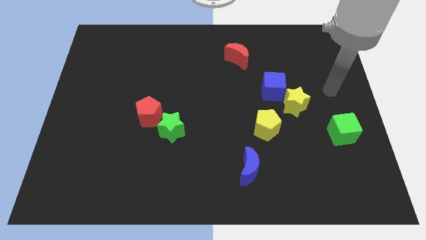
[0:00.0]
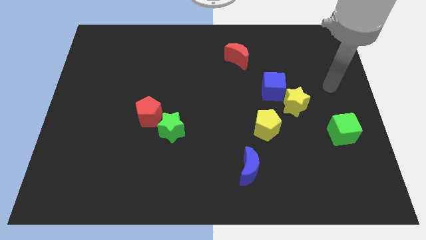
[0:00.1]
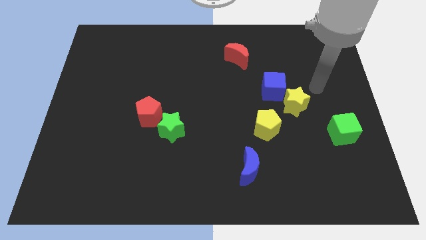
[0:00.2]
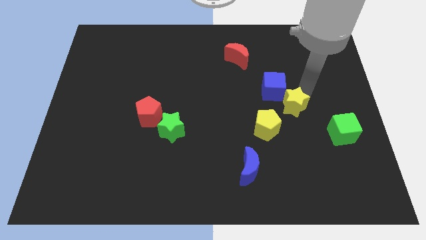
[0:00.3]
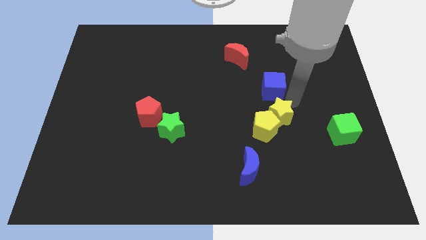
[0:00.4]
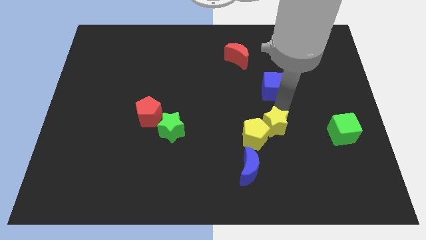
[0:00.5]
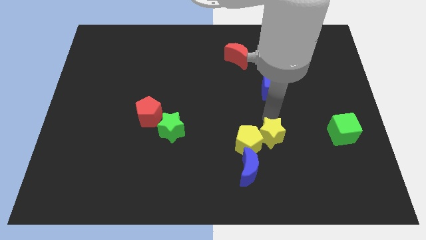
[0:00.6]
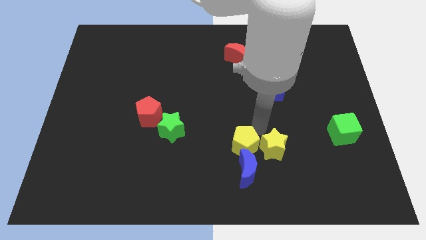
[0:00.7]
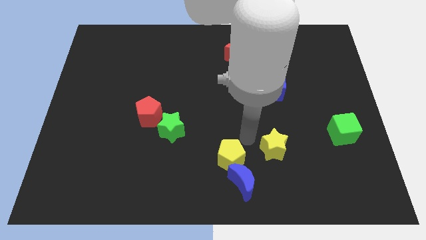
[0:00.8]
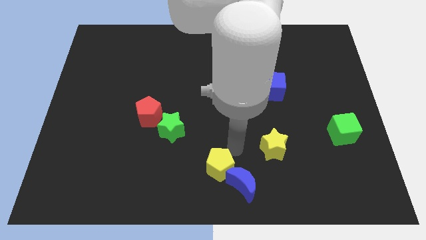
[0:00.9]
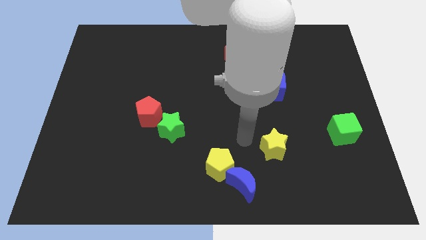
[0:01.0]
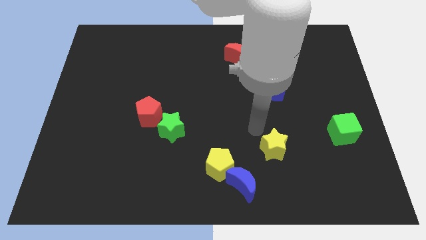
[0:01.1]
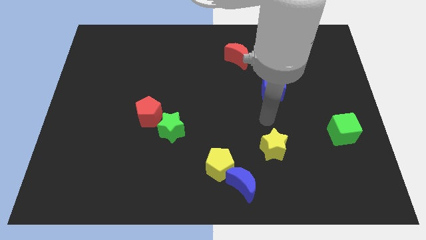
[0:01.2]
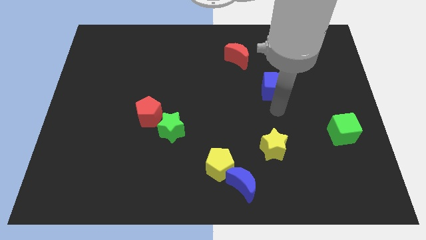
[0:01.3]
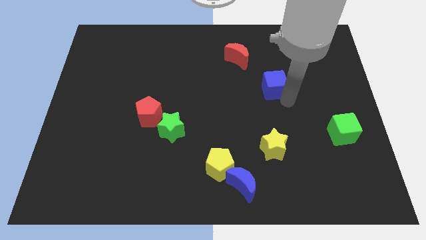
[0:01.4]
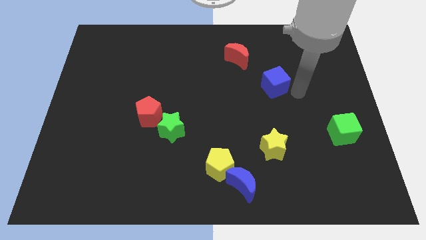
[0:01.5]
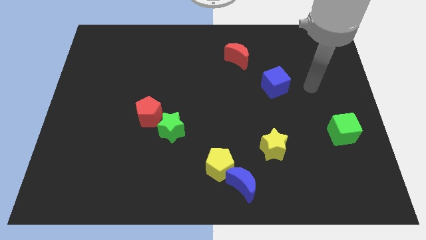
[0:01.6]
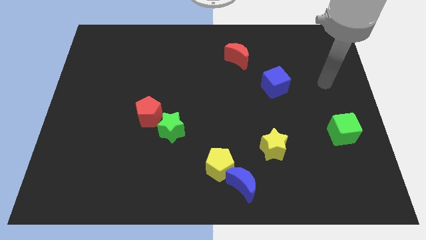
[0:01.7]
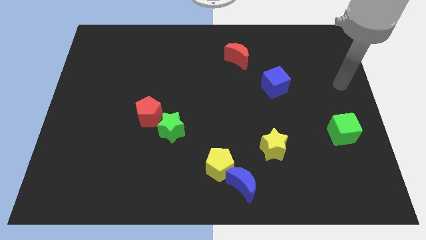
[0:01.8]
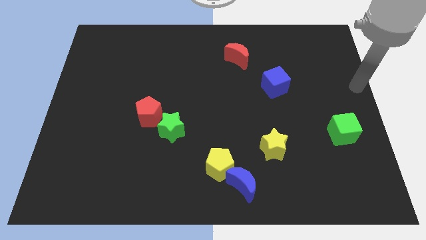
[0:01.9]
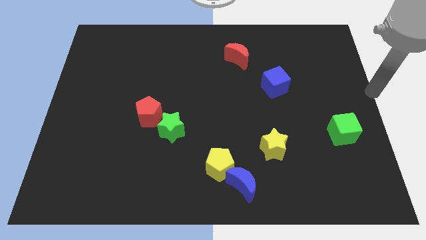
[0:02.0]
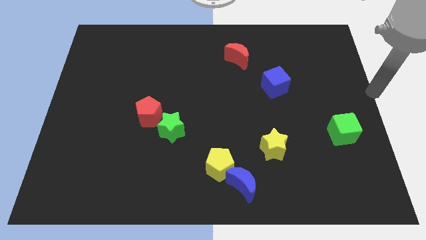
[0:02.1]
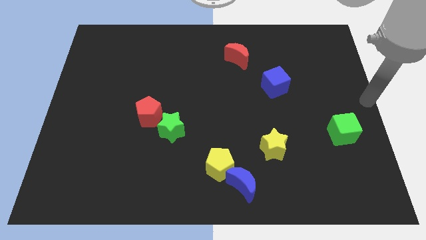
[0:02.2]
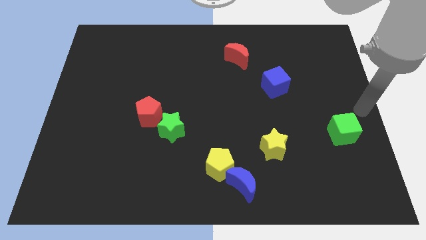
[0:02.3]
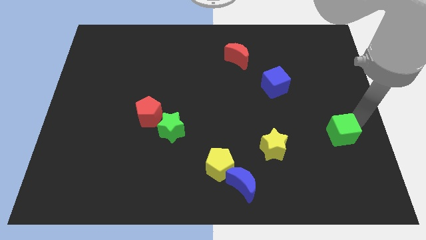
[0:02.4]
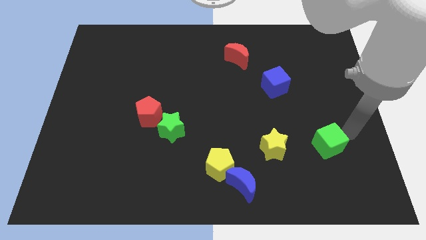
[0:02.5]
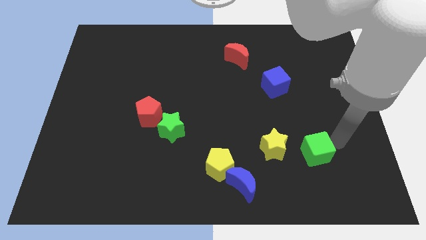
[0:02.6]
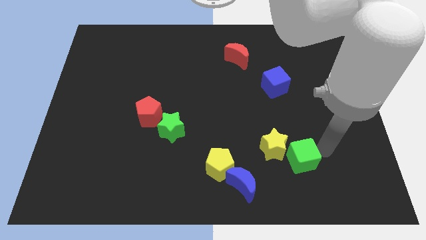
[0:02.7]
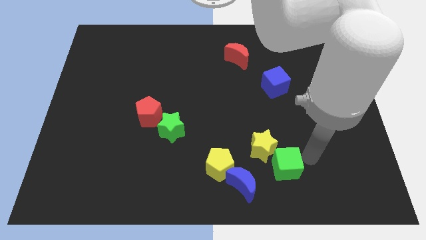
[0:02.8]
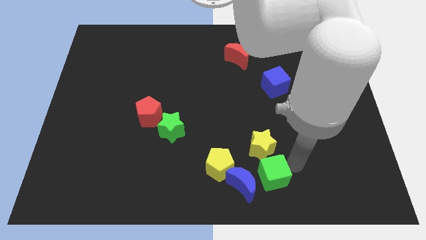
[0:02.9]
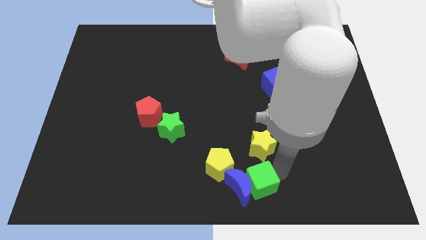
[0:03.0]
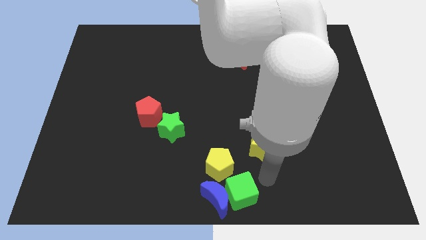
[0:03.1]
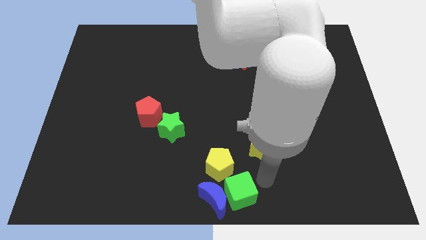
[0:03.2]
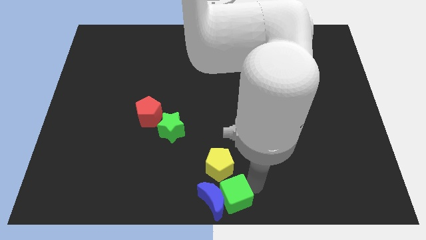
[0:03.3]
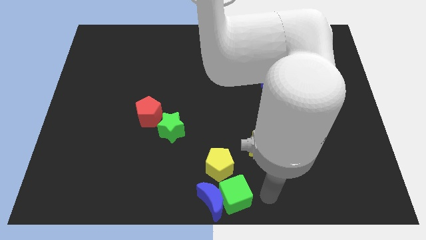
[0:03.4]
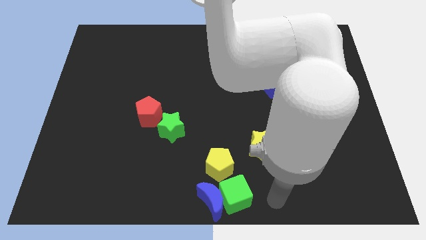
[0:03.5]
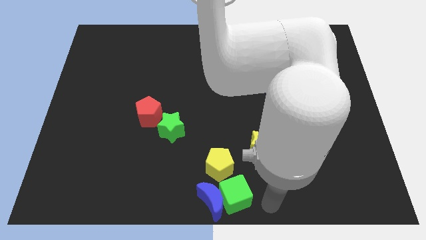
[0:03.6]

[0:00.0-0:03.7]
move green cube to the bottom center of the board

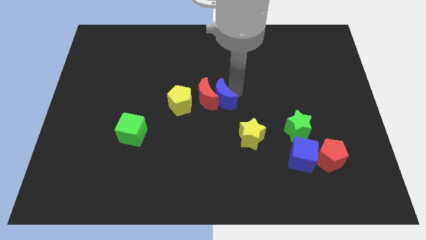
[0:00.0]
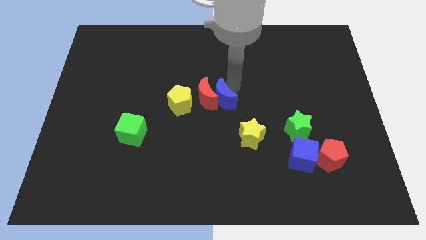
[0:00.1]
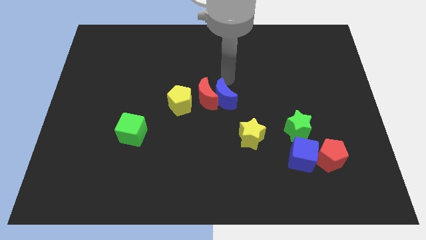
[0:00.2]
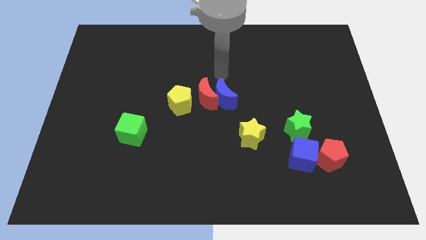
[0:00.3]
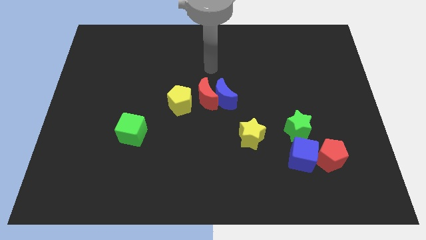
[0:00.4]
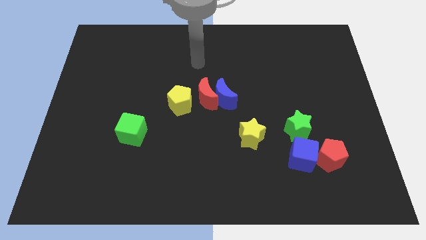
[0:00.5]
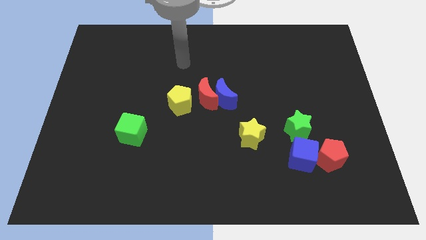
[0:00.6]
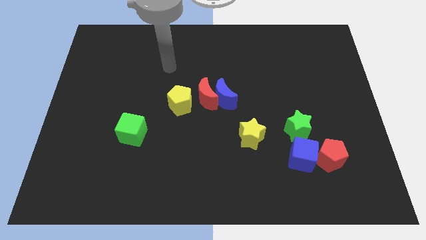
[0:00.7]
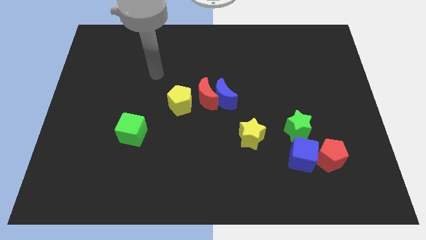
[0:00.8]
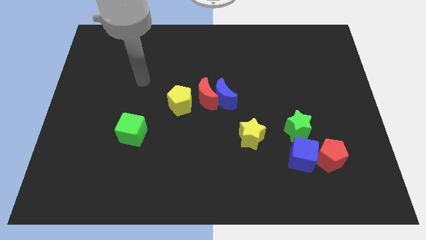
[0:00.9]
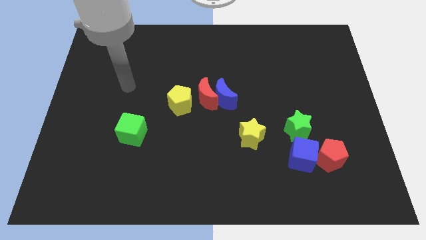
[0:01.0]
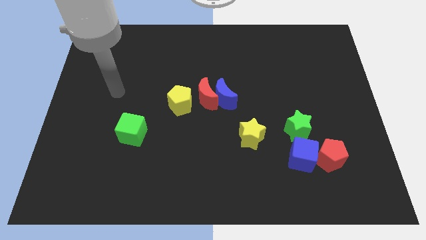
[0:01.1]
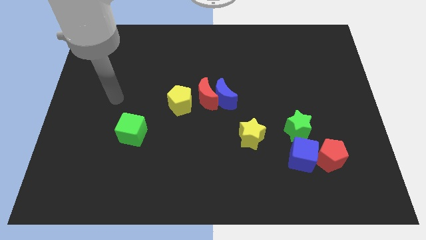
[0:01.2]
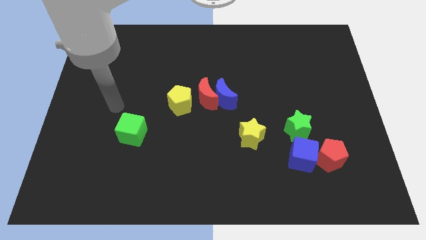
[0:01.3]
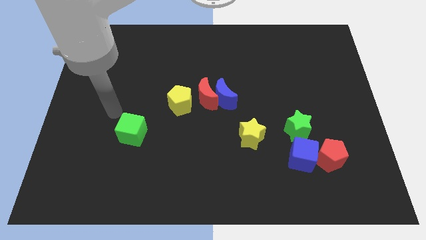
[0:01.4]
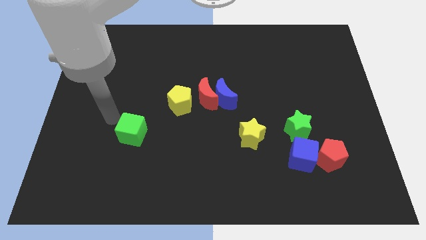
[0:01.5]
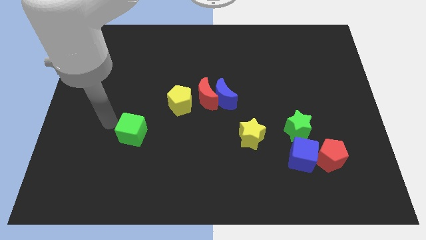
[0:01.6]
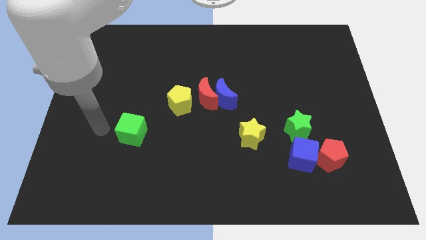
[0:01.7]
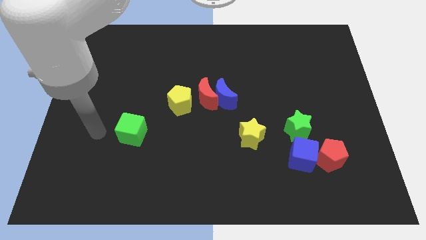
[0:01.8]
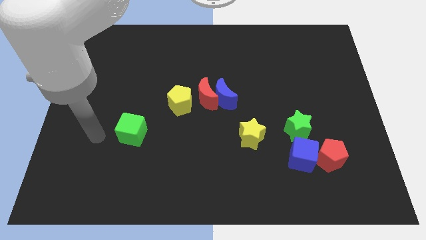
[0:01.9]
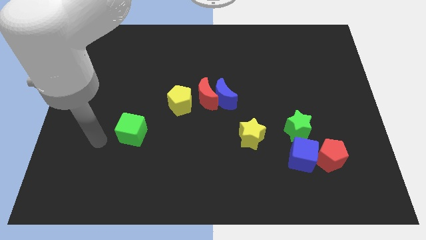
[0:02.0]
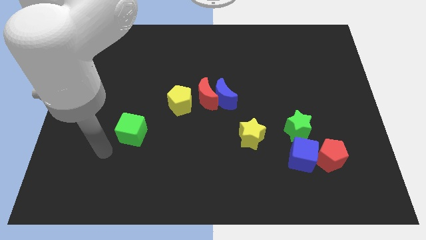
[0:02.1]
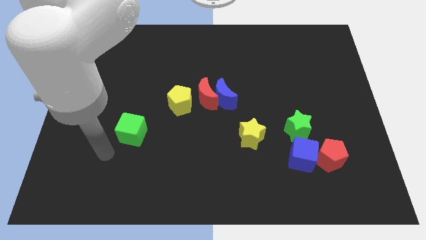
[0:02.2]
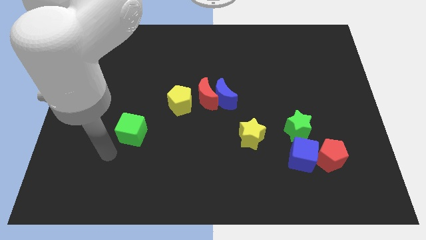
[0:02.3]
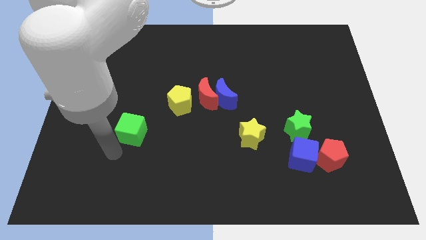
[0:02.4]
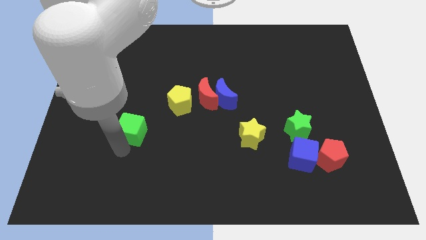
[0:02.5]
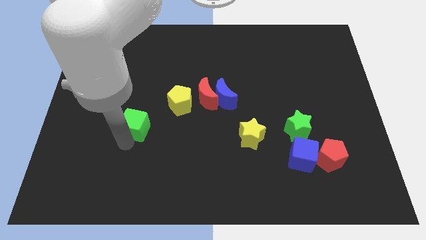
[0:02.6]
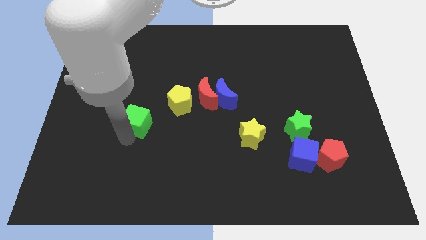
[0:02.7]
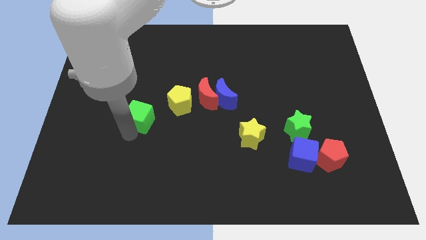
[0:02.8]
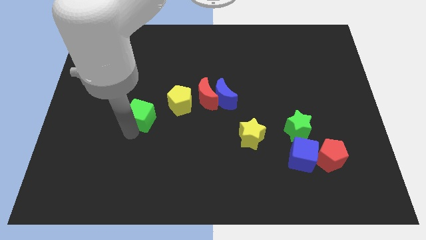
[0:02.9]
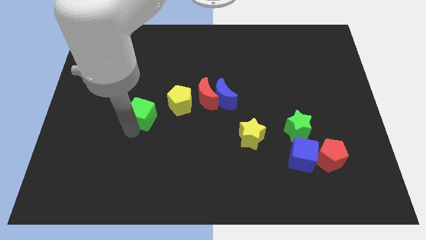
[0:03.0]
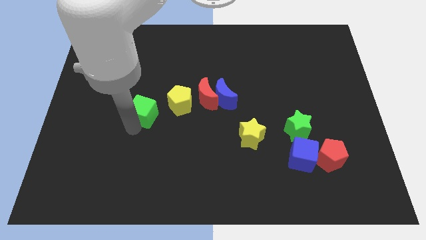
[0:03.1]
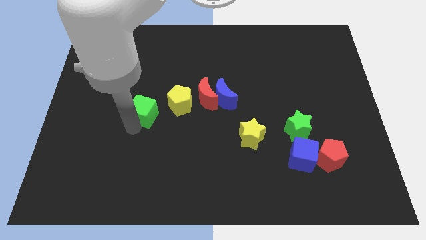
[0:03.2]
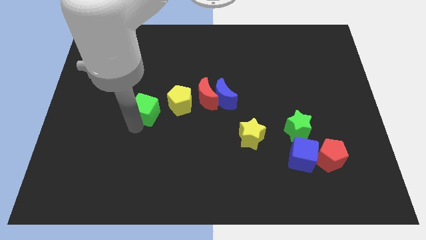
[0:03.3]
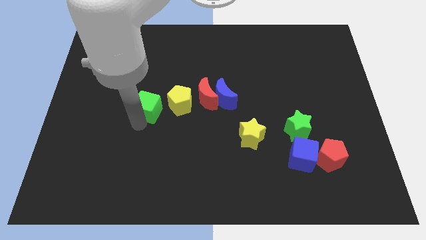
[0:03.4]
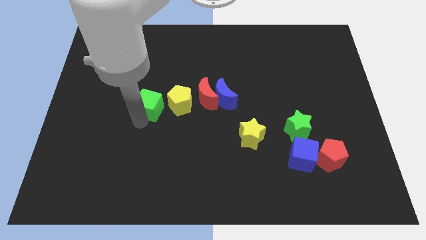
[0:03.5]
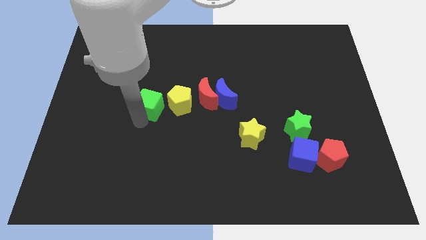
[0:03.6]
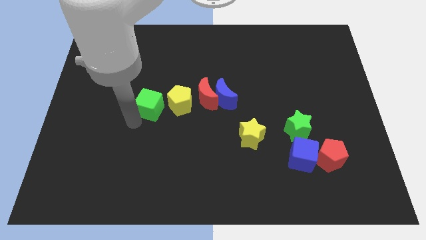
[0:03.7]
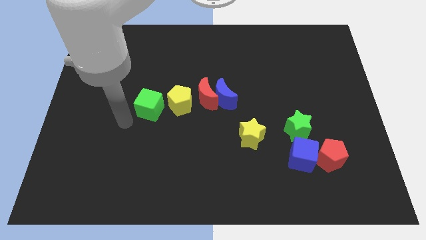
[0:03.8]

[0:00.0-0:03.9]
slide the green cube to left of yellow pentagon

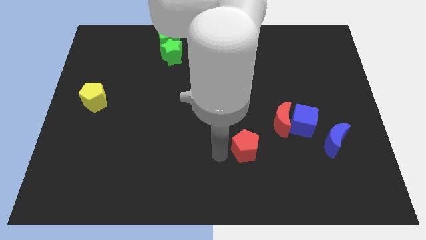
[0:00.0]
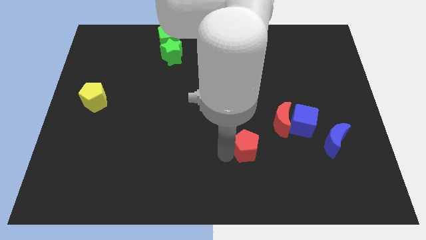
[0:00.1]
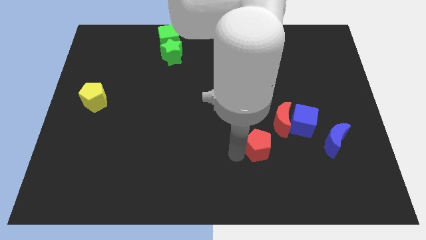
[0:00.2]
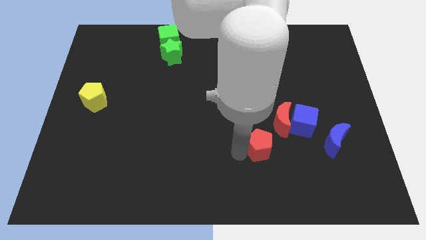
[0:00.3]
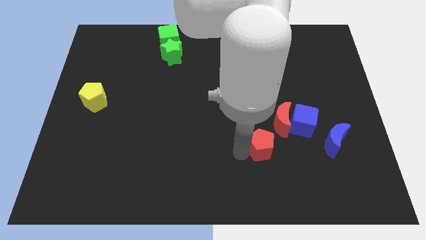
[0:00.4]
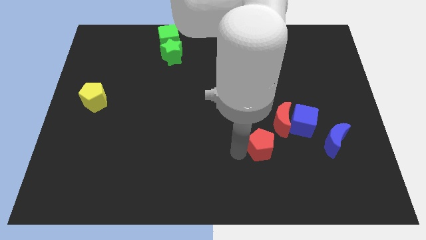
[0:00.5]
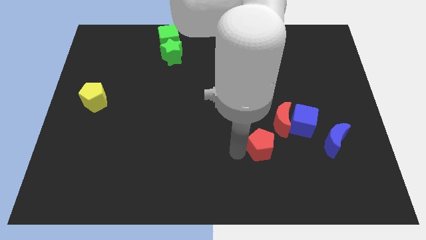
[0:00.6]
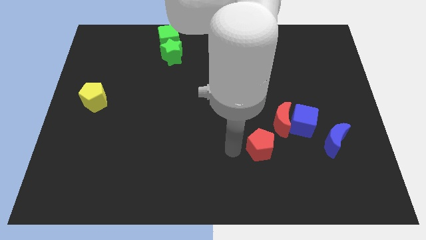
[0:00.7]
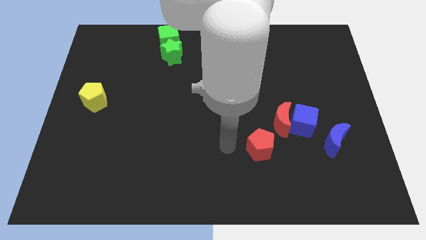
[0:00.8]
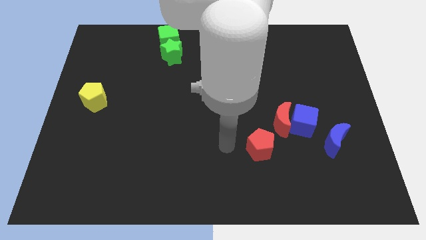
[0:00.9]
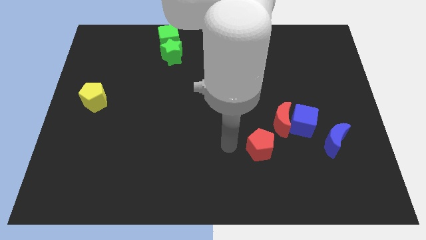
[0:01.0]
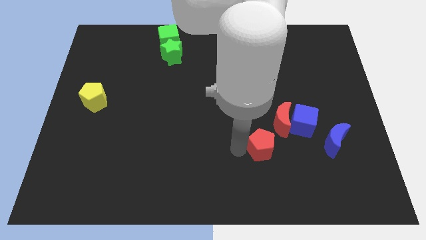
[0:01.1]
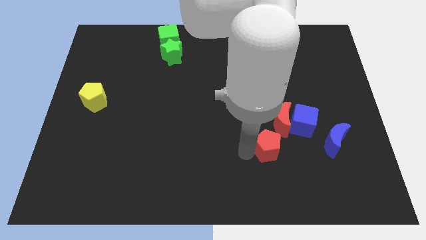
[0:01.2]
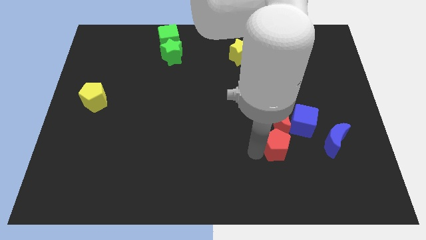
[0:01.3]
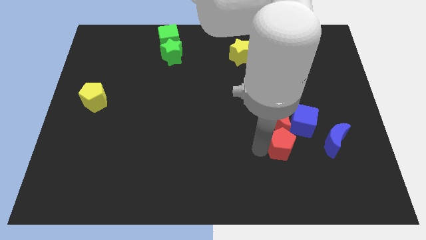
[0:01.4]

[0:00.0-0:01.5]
move the red pentagon to the bottom of the red crescent
